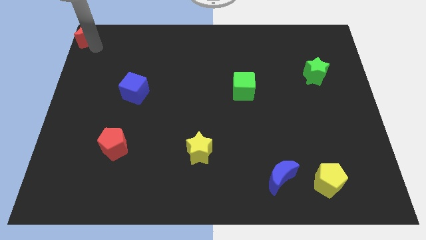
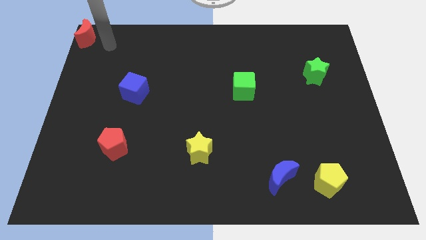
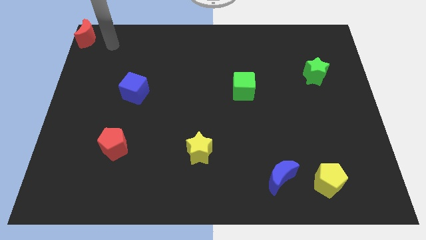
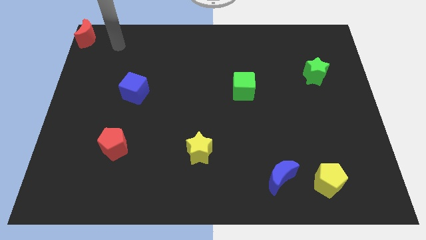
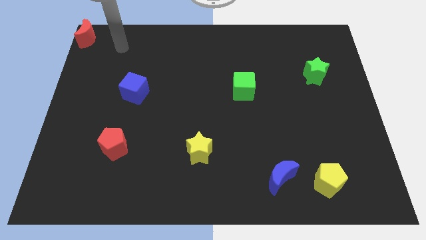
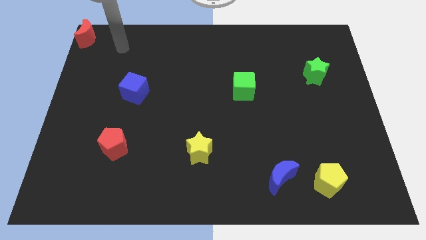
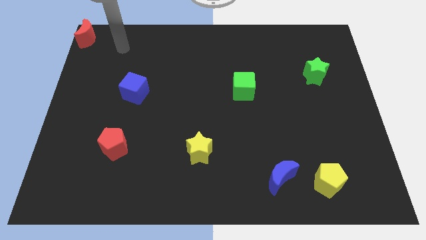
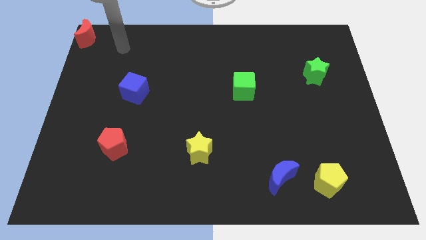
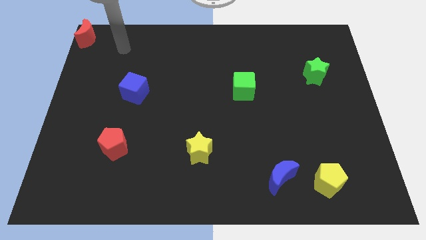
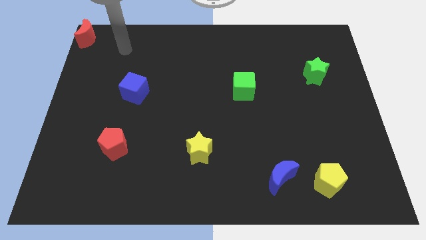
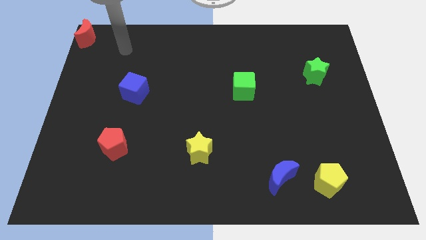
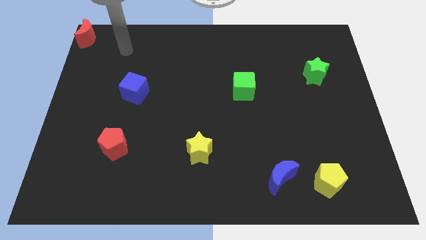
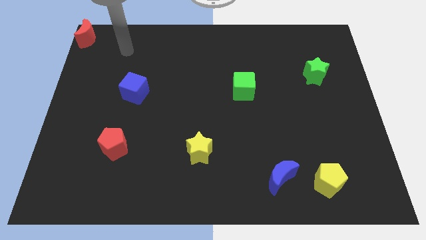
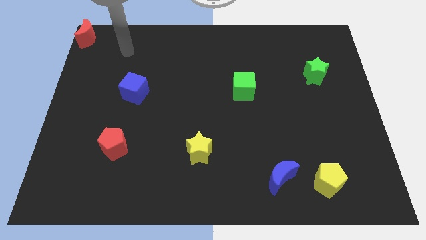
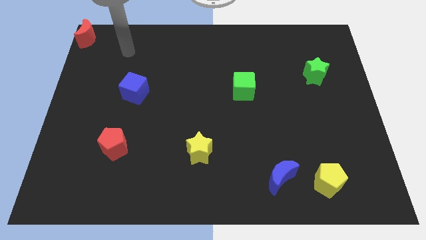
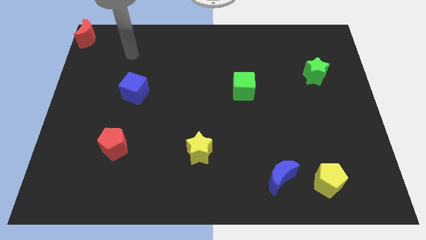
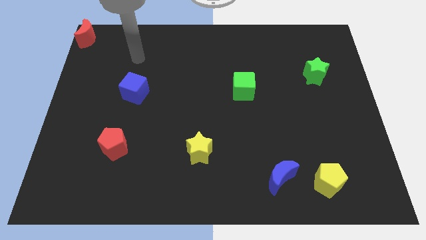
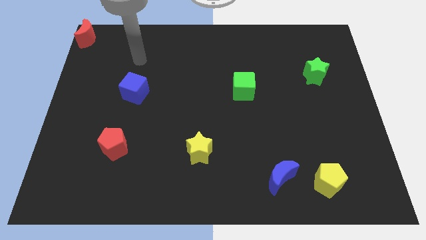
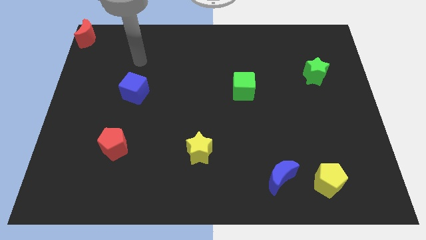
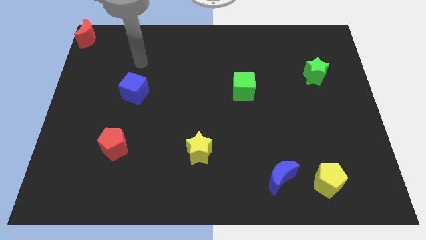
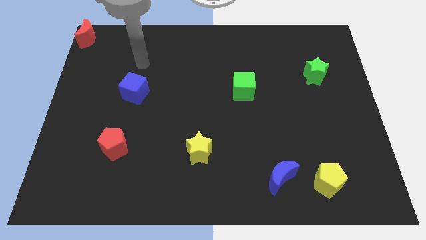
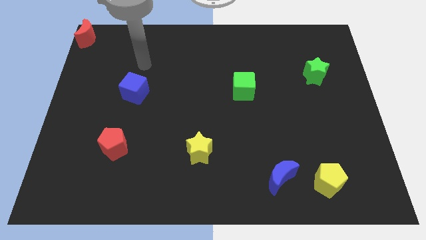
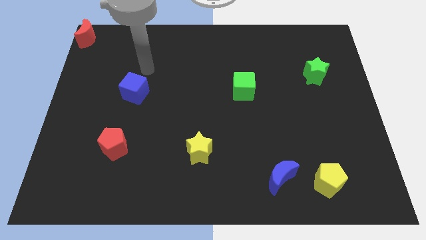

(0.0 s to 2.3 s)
move away from the red moon

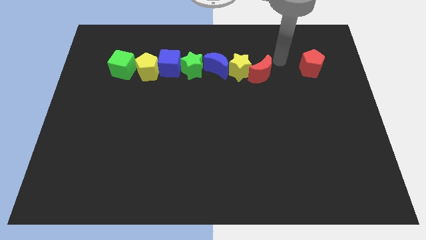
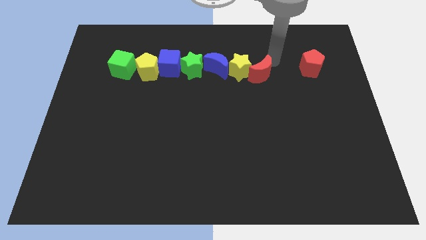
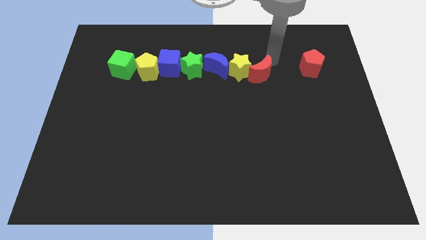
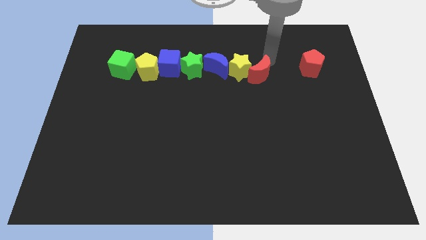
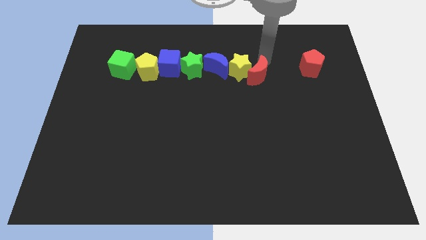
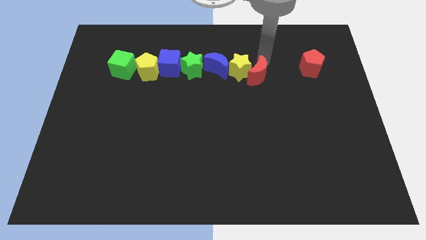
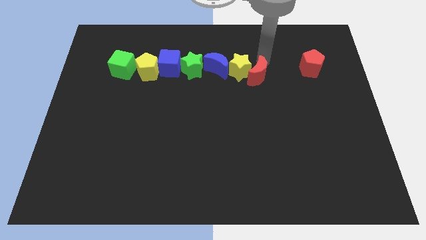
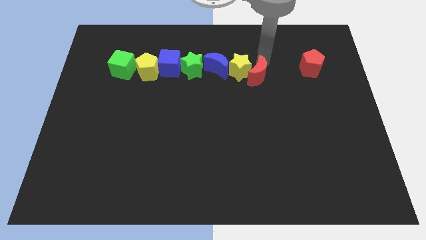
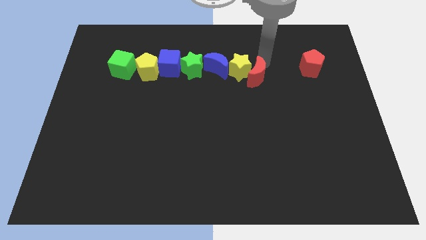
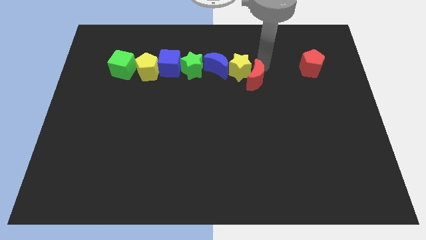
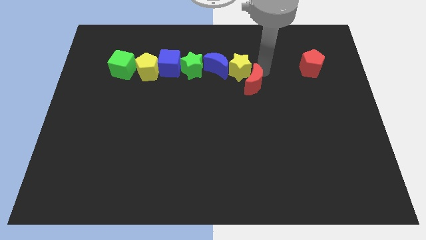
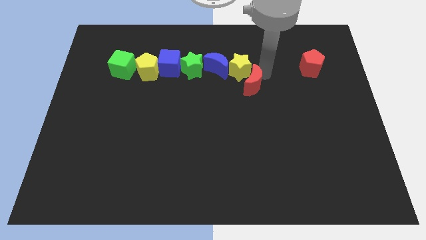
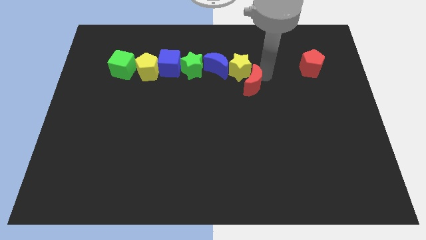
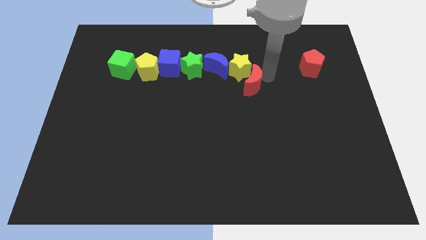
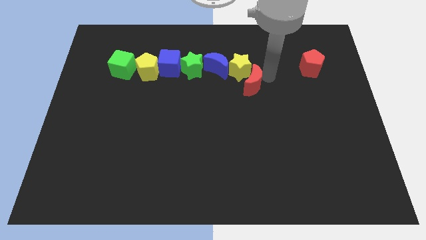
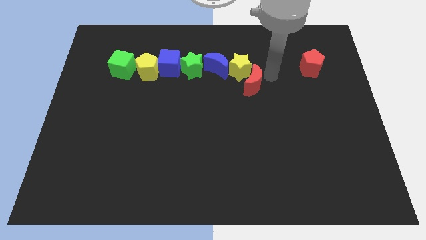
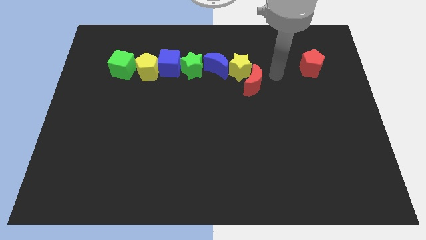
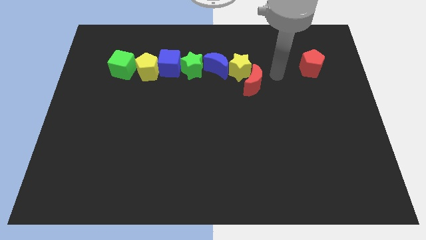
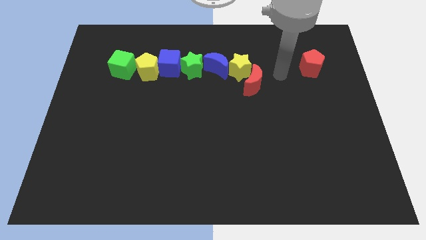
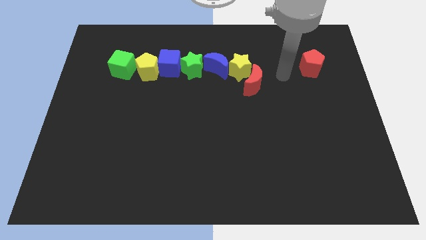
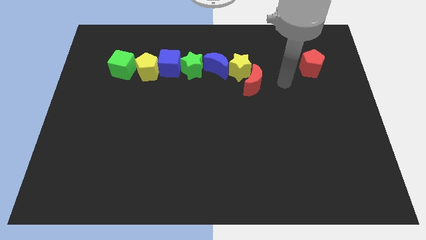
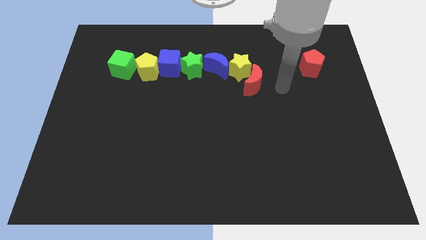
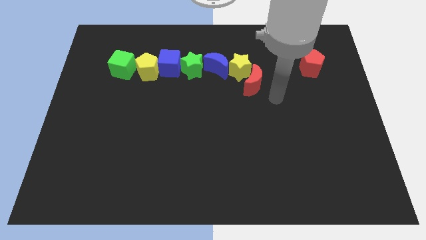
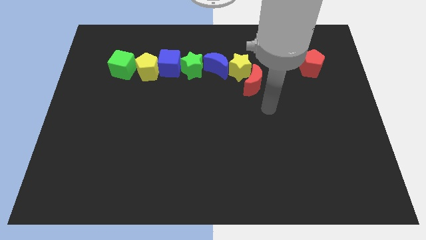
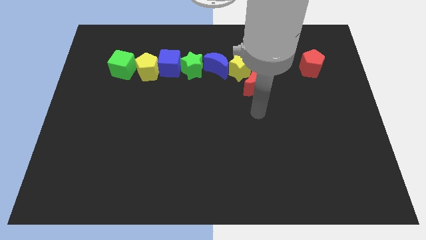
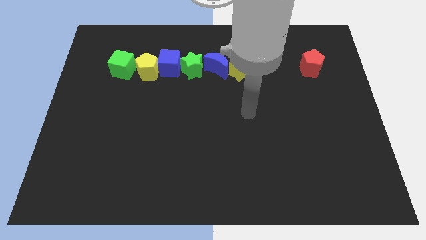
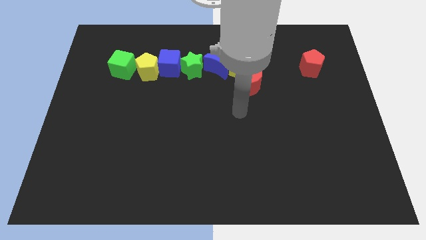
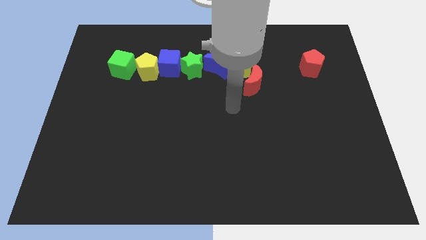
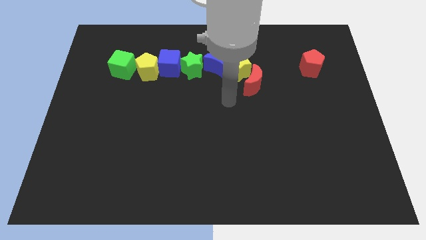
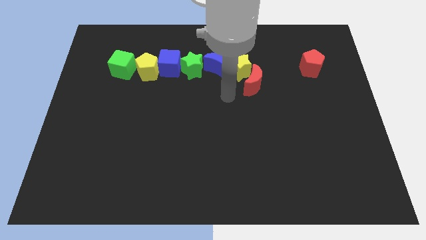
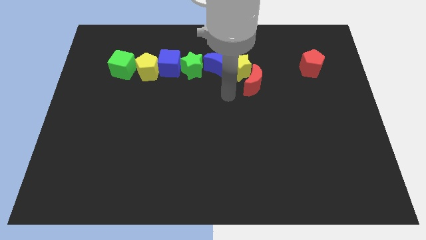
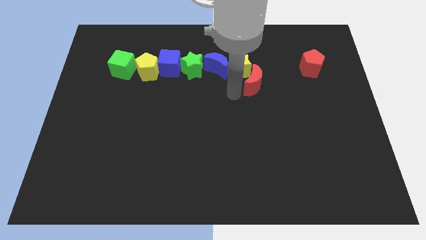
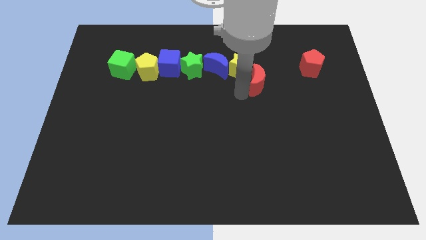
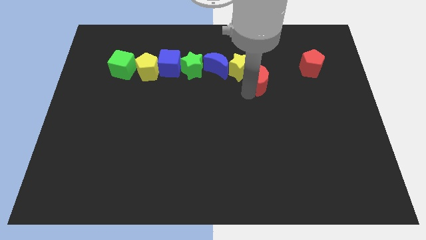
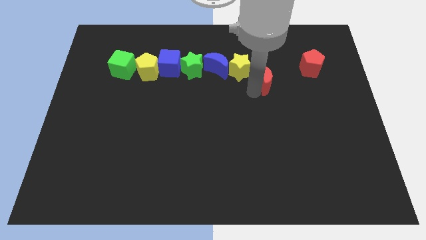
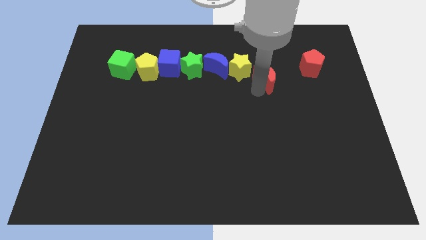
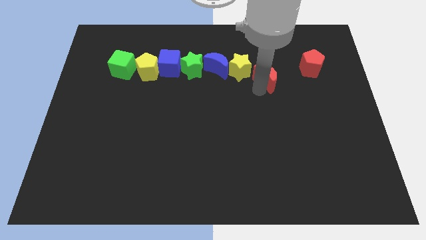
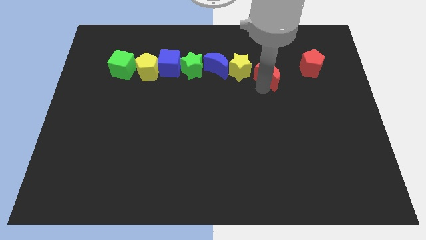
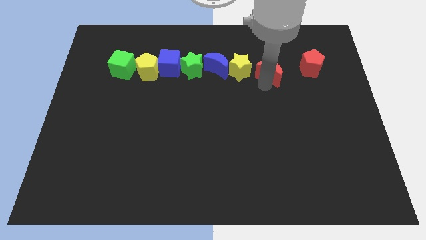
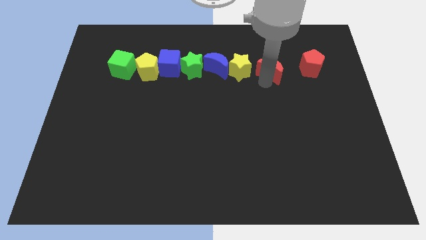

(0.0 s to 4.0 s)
separate red moon from the yellow star

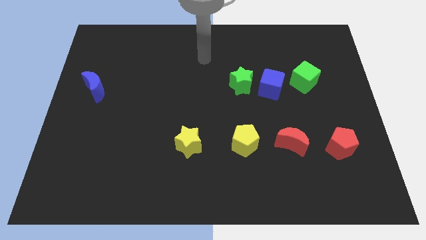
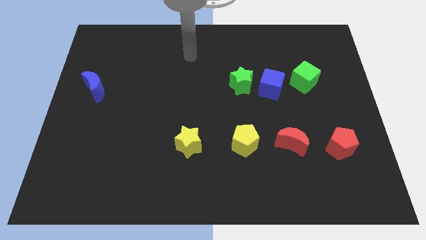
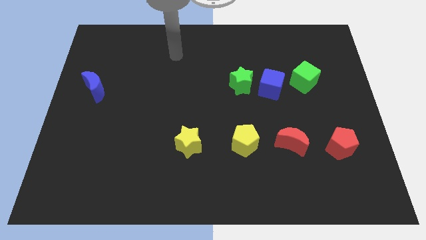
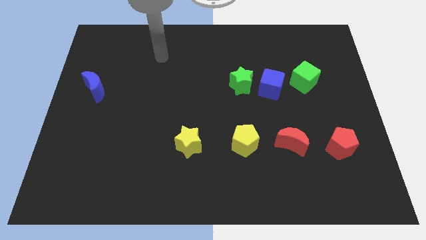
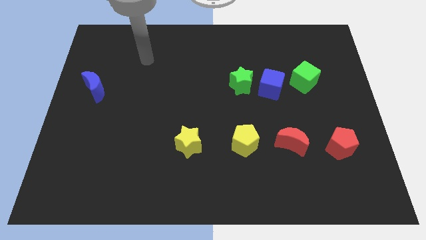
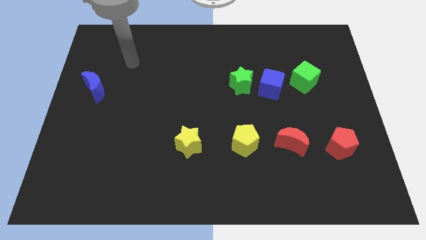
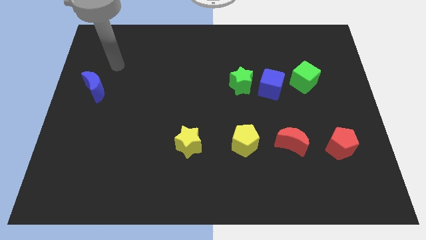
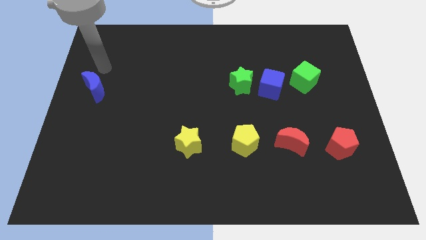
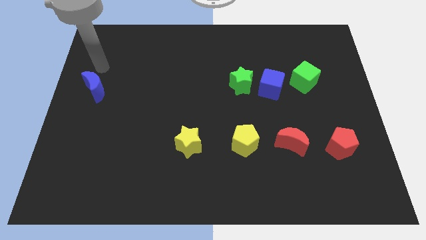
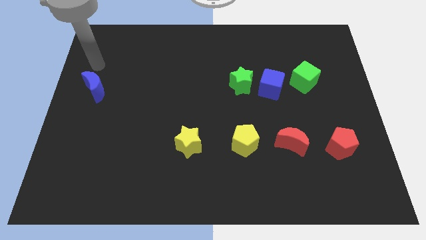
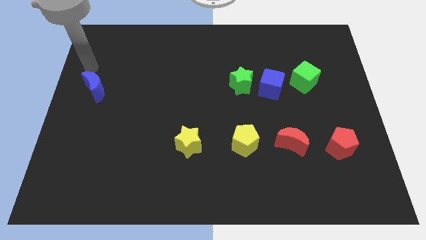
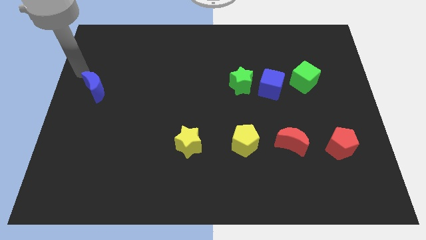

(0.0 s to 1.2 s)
move arm towards the top left of the board

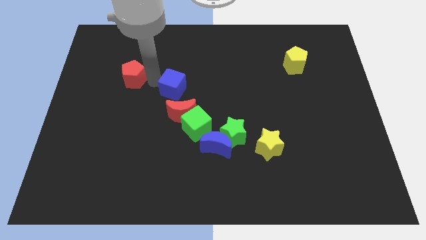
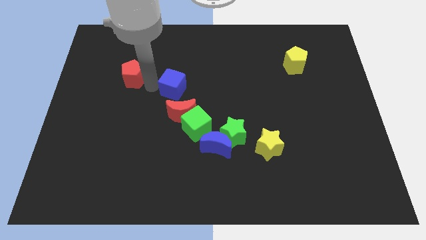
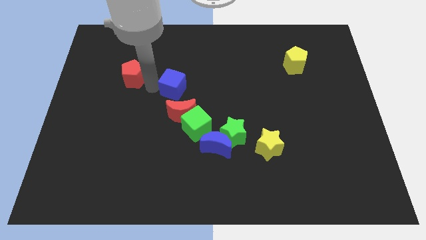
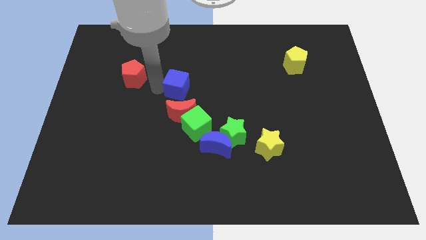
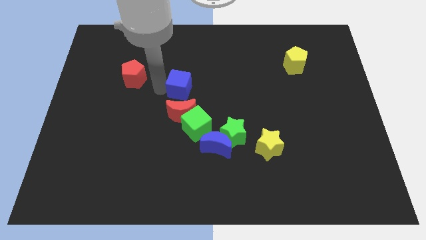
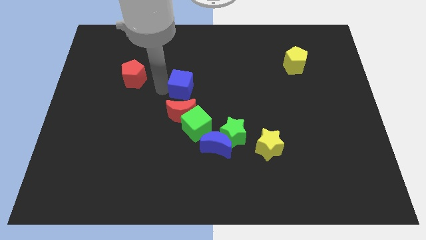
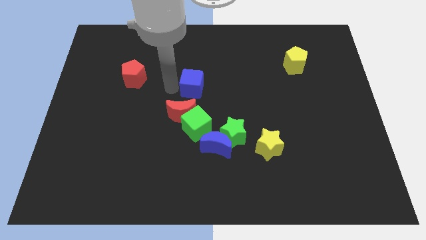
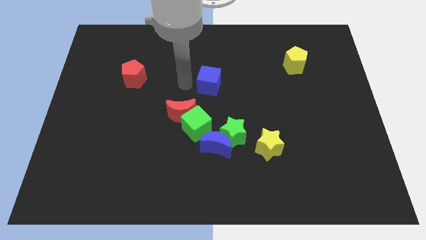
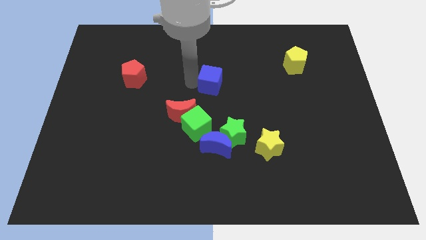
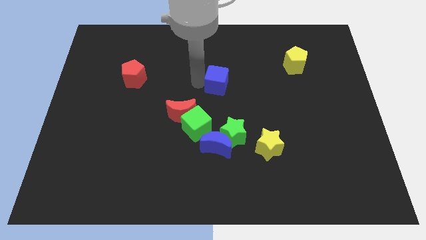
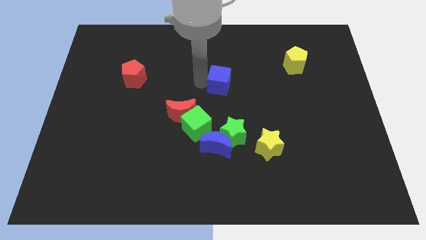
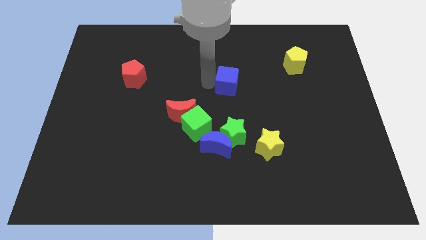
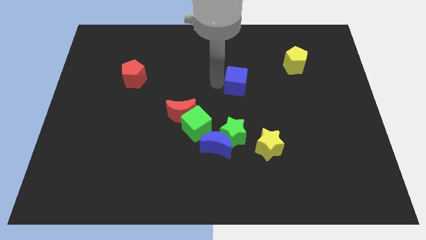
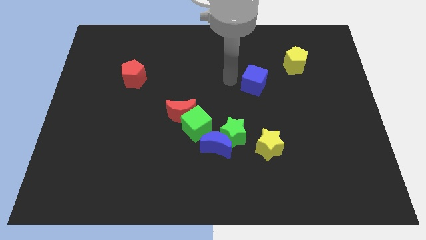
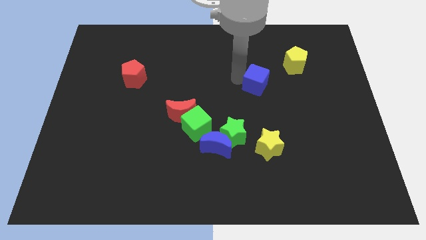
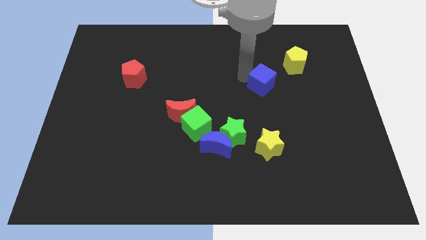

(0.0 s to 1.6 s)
move the blue cube towards the diagonally bottom left to the yellow pentagon

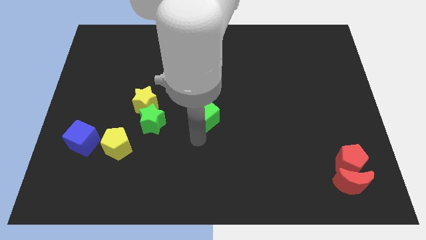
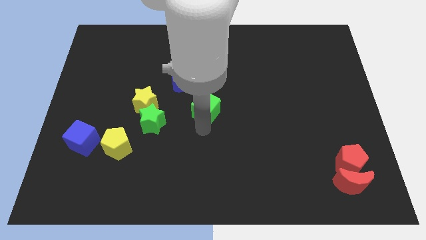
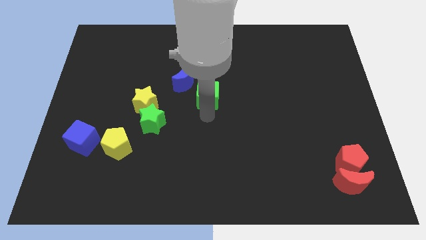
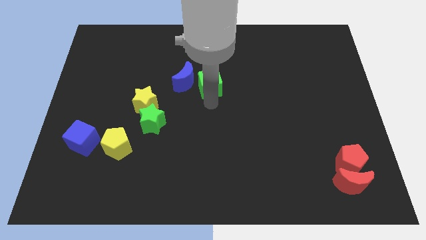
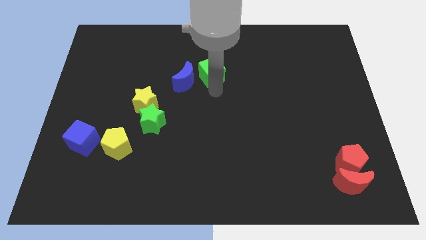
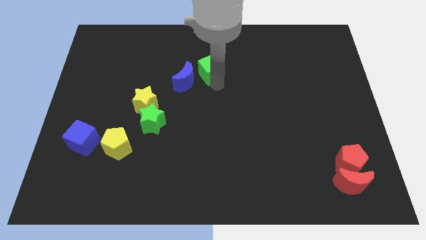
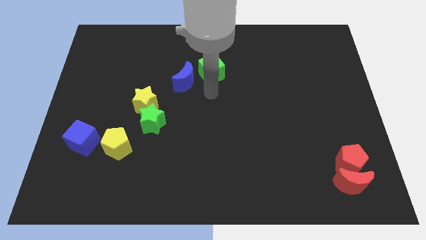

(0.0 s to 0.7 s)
place the green cube to the right of the blue moon
